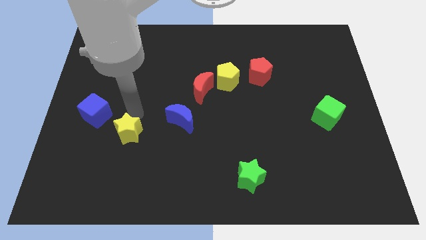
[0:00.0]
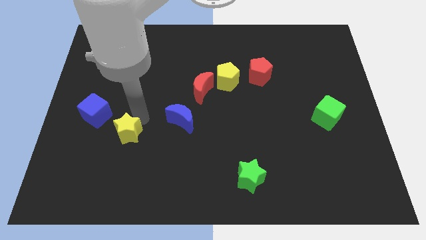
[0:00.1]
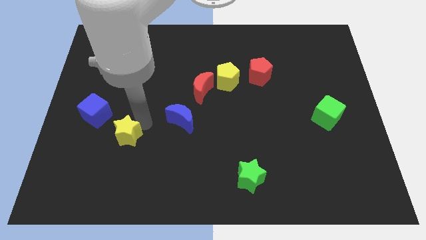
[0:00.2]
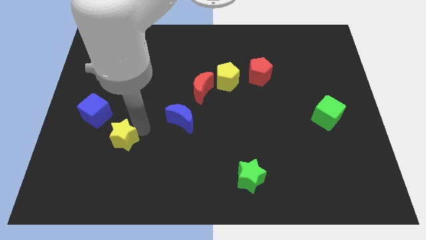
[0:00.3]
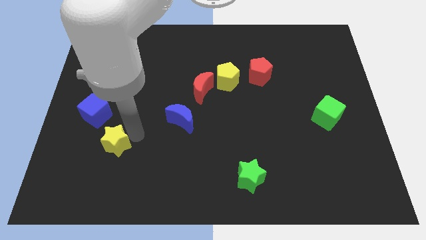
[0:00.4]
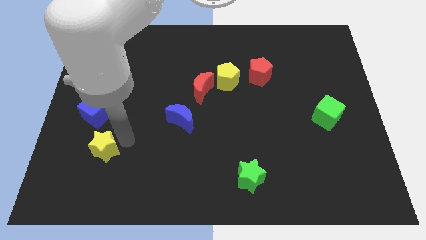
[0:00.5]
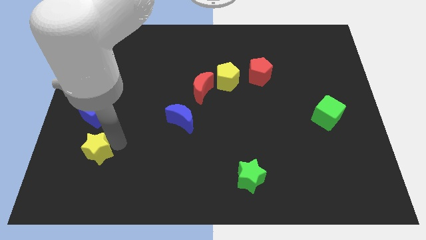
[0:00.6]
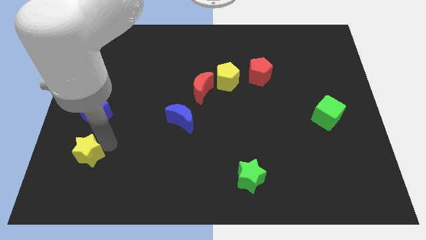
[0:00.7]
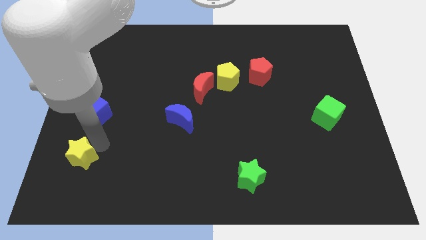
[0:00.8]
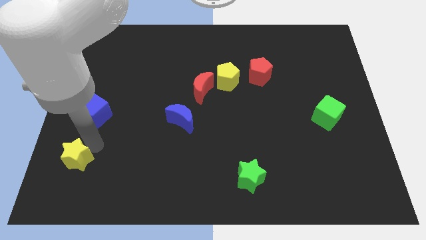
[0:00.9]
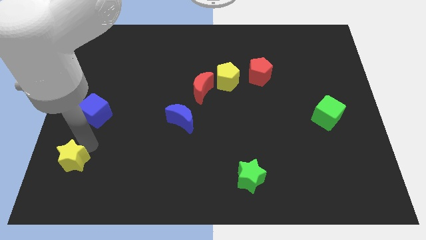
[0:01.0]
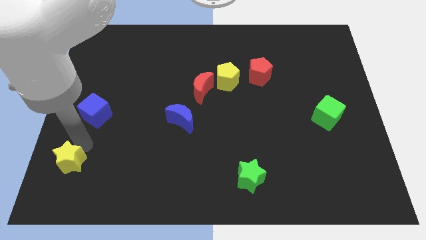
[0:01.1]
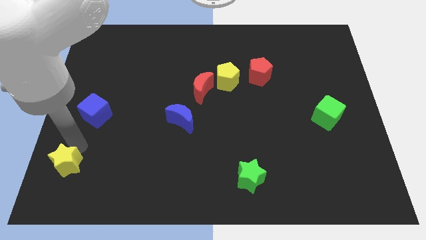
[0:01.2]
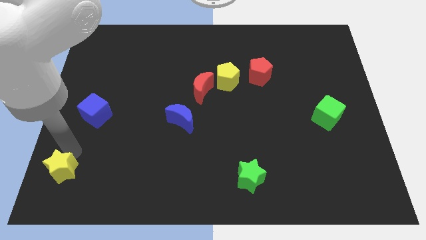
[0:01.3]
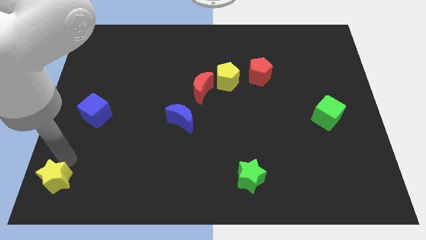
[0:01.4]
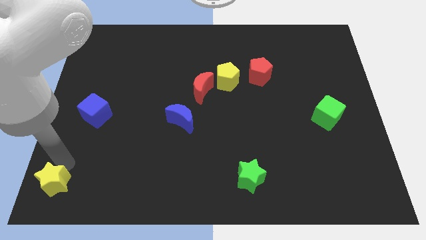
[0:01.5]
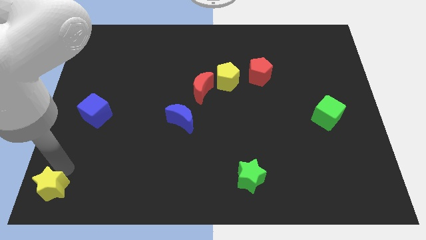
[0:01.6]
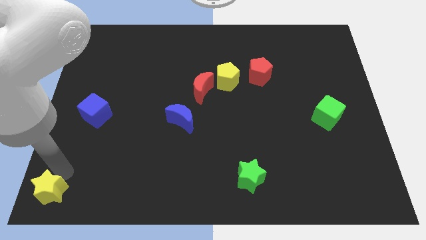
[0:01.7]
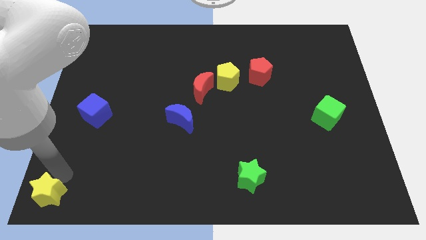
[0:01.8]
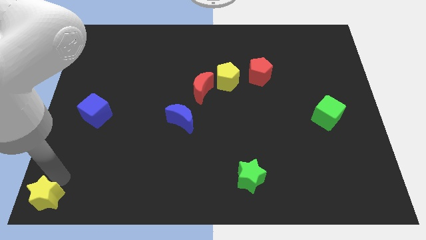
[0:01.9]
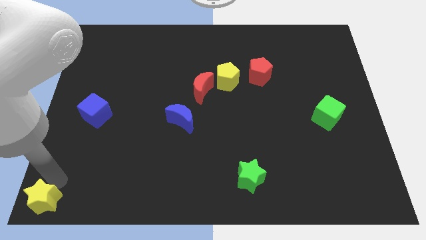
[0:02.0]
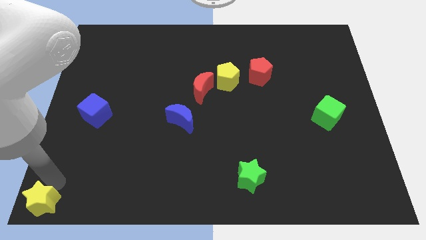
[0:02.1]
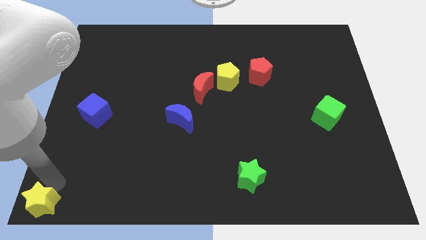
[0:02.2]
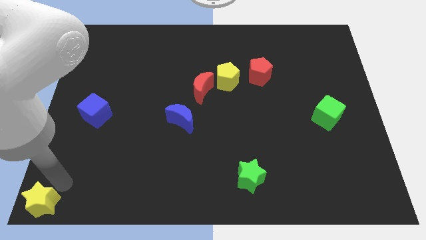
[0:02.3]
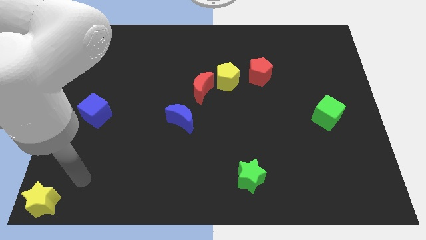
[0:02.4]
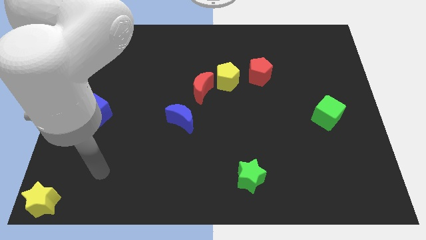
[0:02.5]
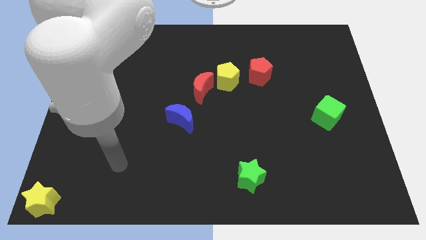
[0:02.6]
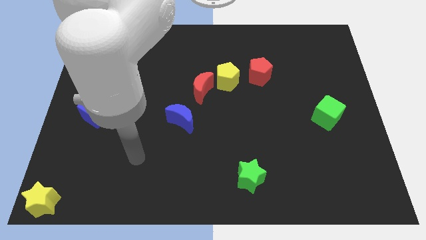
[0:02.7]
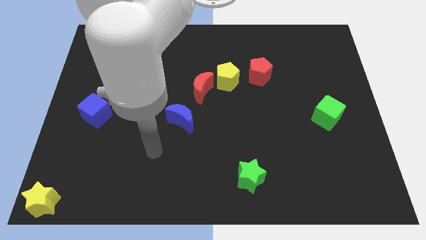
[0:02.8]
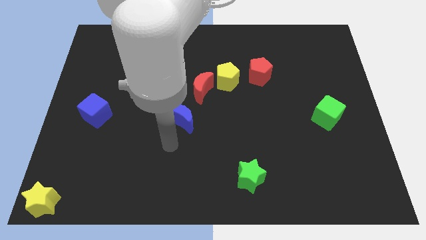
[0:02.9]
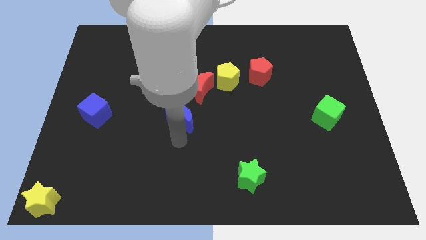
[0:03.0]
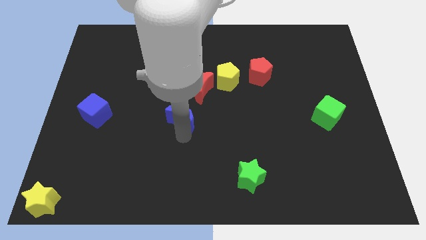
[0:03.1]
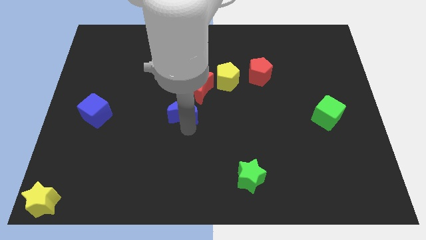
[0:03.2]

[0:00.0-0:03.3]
push the yellow star to the bottom left corner of the board

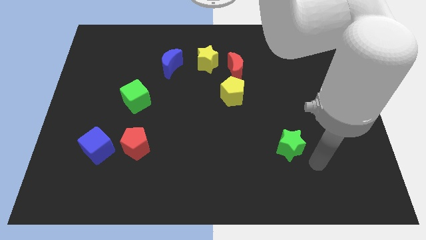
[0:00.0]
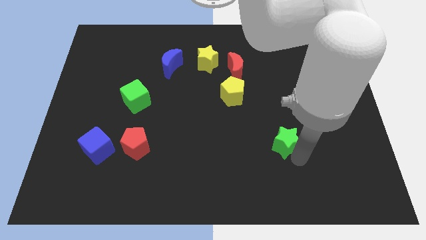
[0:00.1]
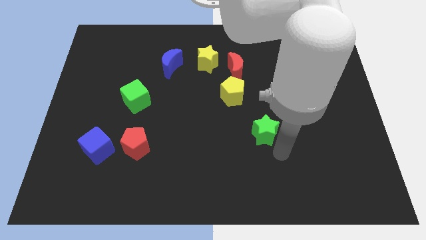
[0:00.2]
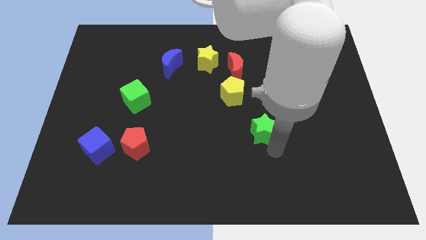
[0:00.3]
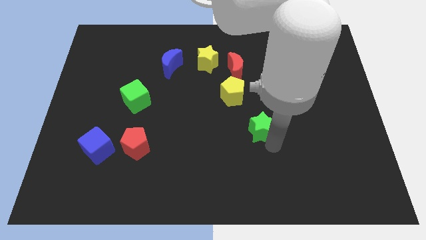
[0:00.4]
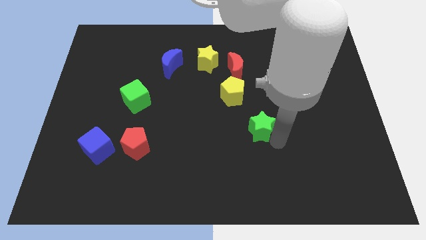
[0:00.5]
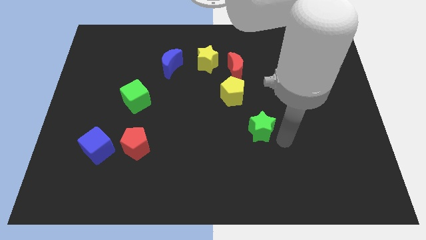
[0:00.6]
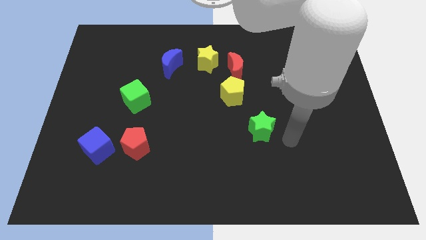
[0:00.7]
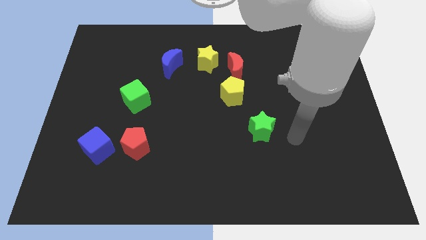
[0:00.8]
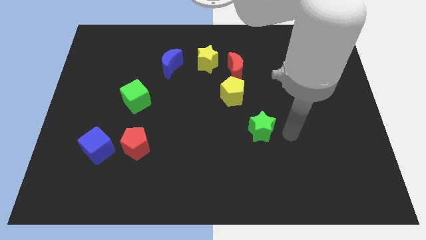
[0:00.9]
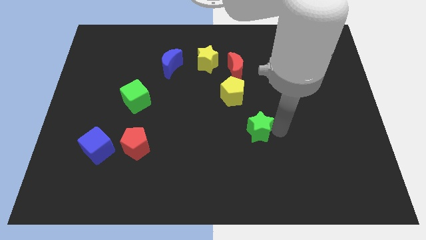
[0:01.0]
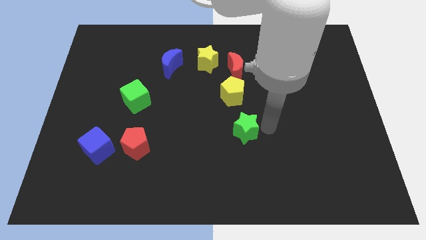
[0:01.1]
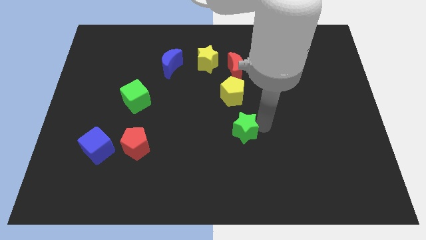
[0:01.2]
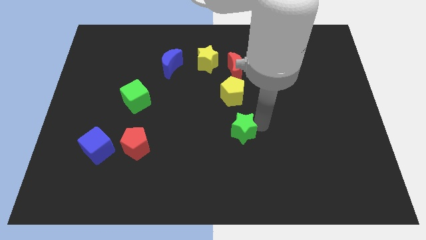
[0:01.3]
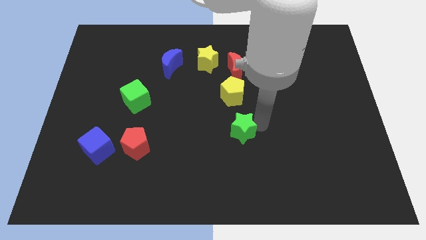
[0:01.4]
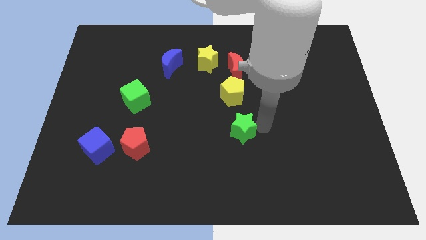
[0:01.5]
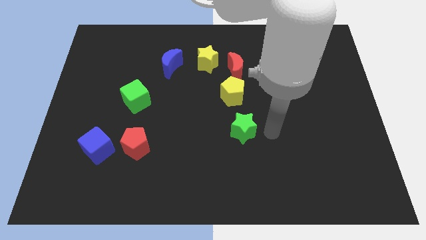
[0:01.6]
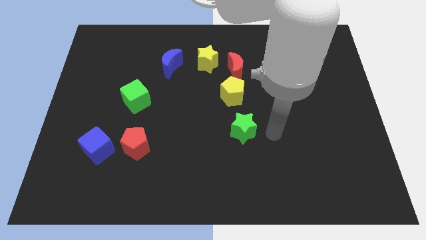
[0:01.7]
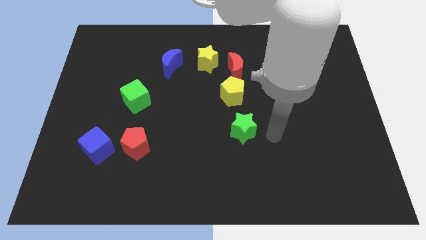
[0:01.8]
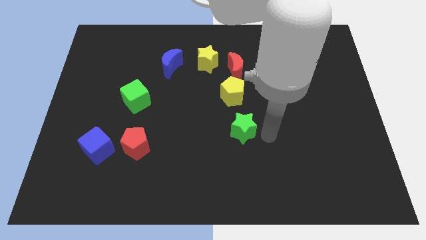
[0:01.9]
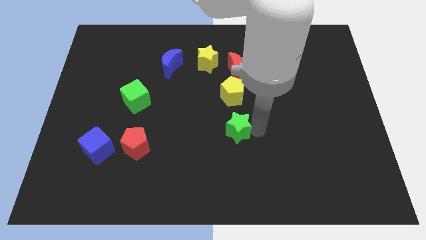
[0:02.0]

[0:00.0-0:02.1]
put the green star below the yellow pentagon

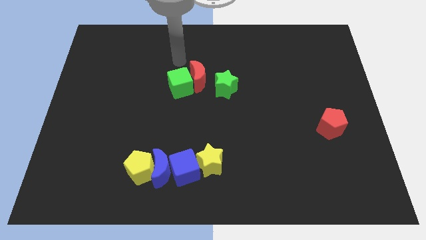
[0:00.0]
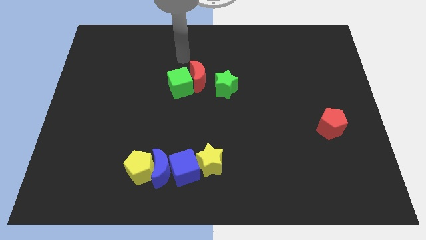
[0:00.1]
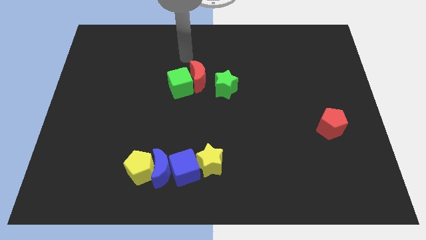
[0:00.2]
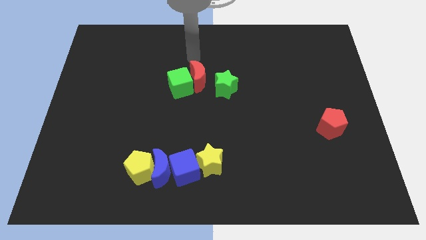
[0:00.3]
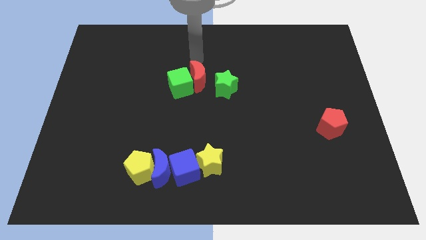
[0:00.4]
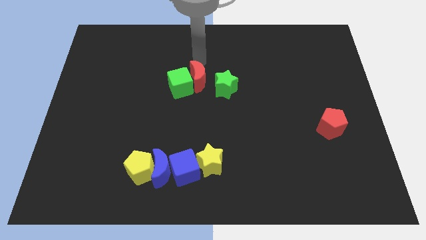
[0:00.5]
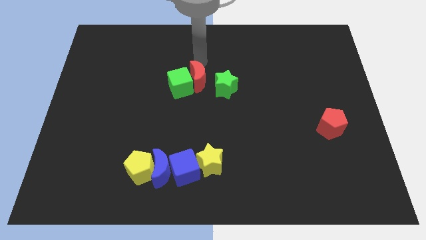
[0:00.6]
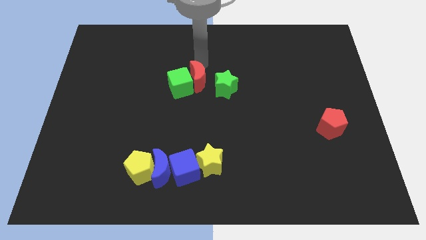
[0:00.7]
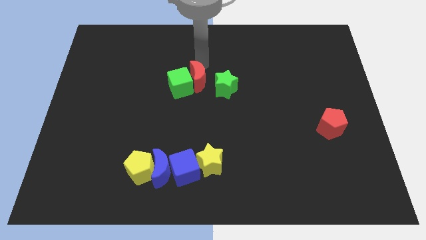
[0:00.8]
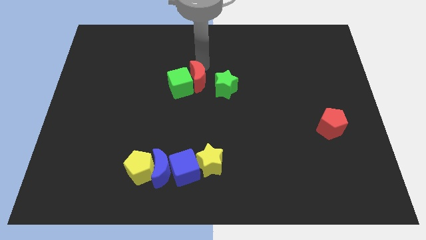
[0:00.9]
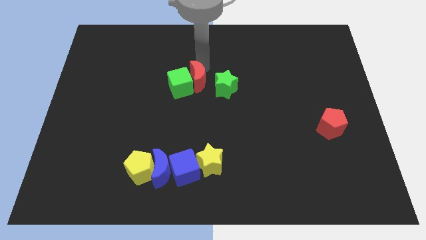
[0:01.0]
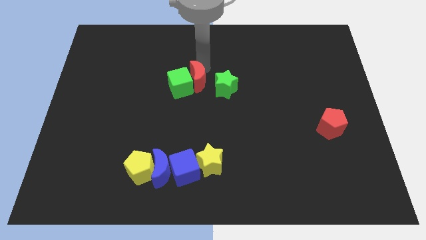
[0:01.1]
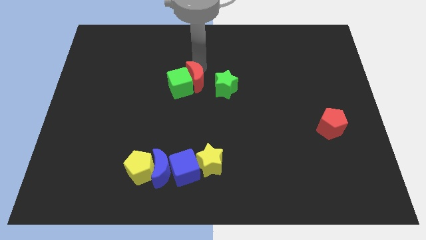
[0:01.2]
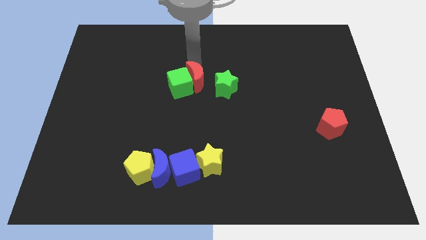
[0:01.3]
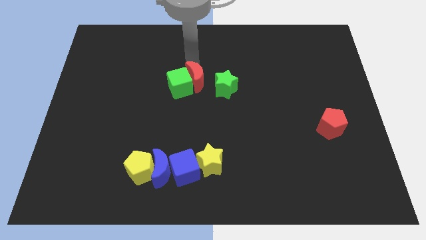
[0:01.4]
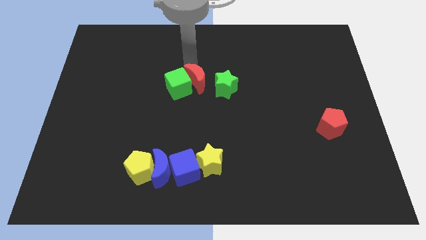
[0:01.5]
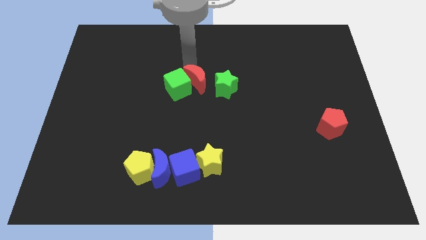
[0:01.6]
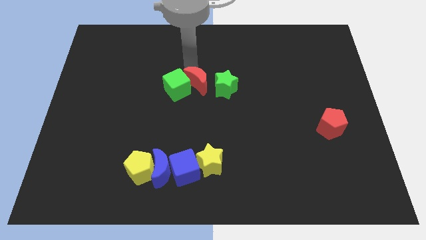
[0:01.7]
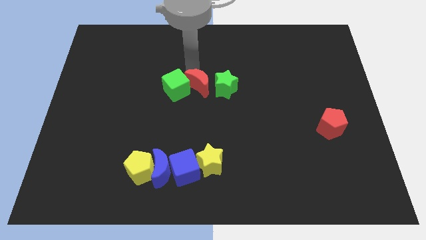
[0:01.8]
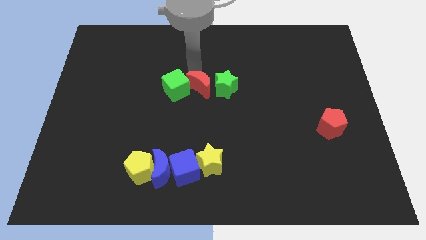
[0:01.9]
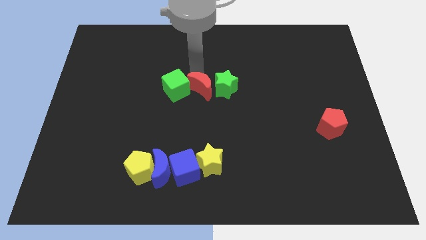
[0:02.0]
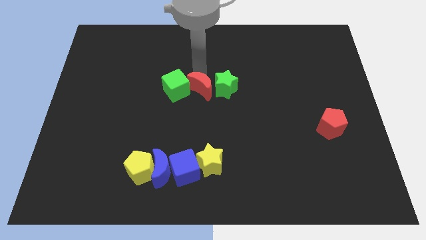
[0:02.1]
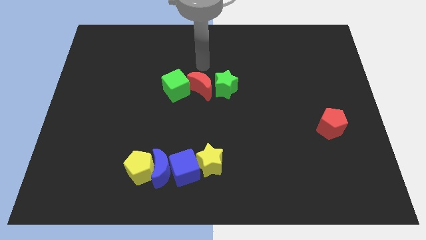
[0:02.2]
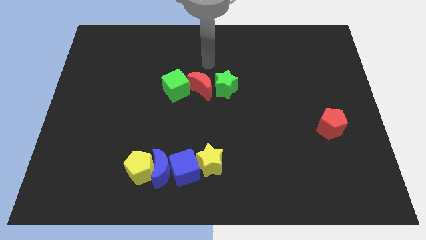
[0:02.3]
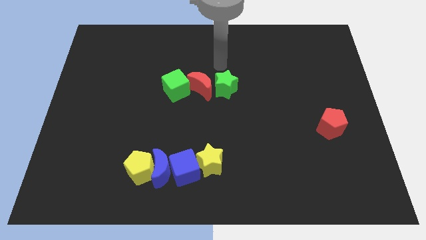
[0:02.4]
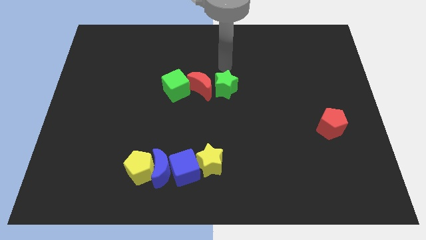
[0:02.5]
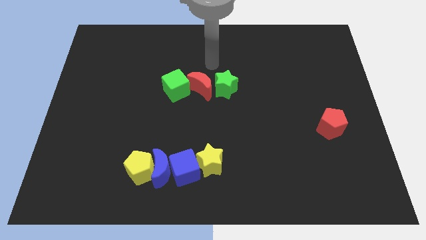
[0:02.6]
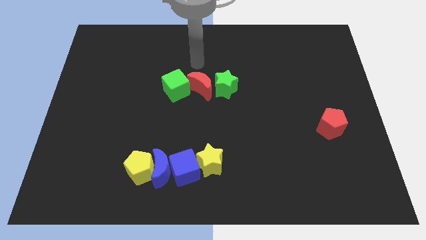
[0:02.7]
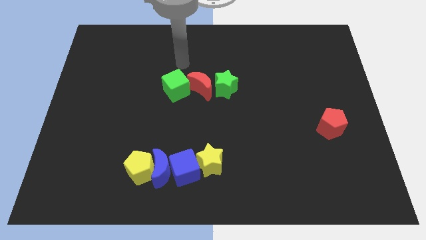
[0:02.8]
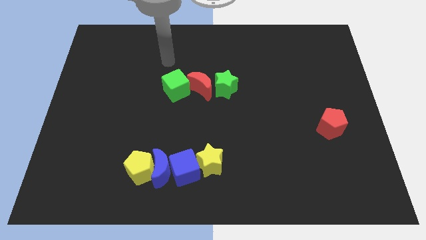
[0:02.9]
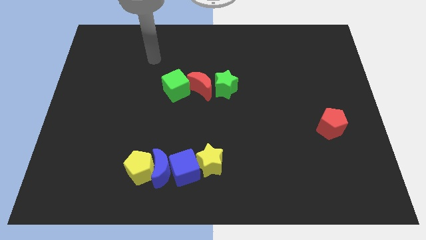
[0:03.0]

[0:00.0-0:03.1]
slightly move red moon middle of the board

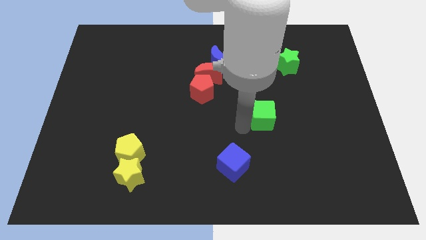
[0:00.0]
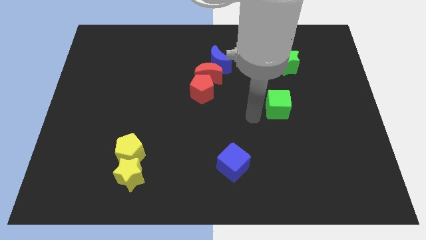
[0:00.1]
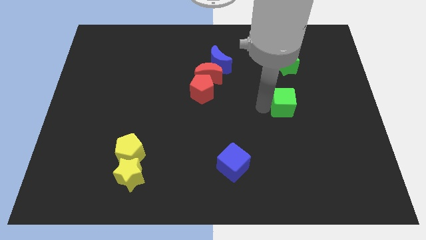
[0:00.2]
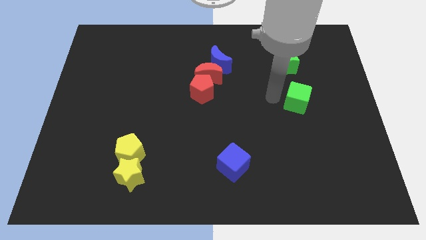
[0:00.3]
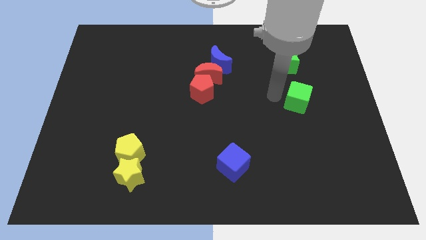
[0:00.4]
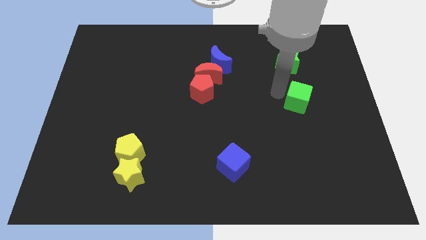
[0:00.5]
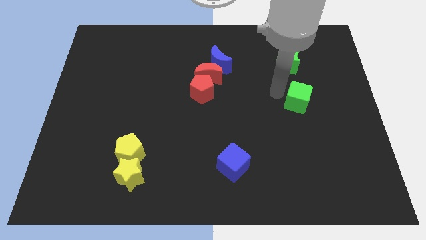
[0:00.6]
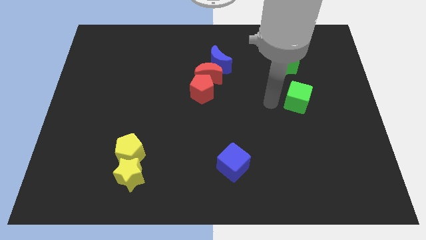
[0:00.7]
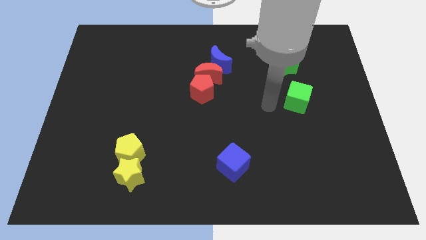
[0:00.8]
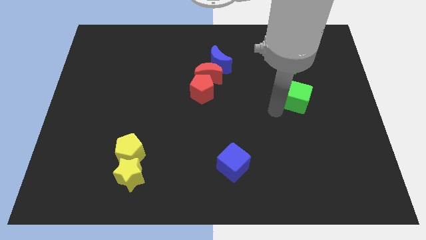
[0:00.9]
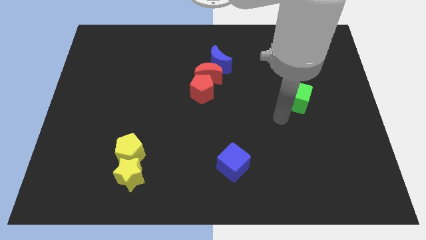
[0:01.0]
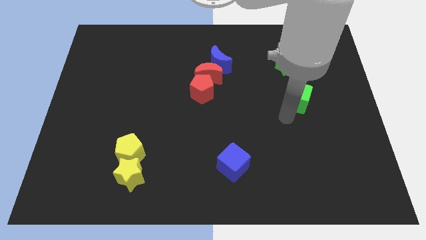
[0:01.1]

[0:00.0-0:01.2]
push green cube slightly diagonally
